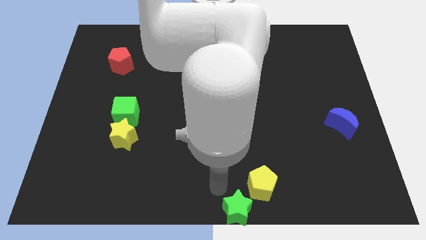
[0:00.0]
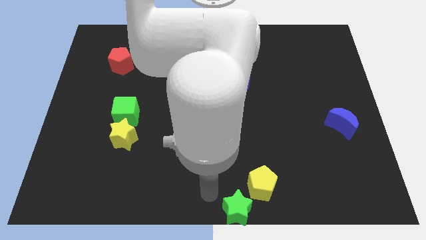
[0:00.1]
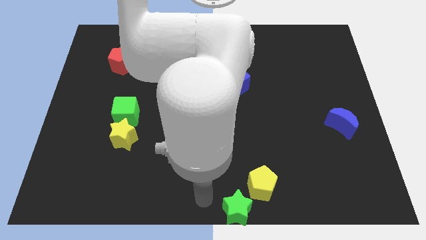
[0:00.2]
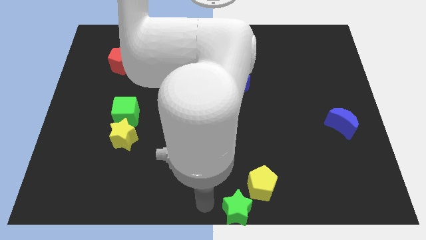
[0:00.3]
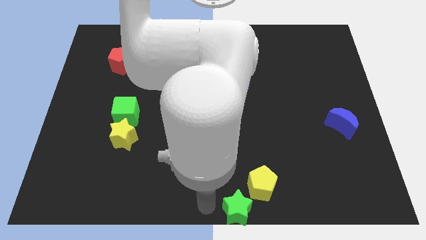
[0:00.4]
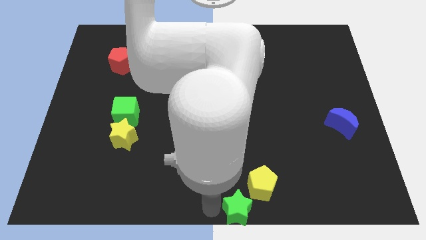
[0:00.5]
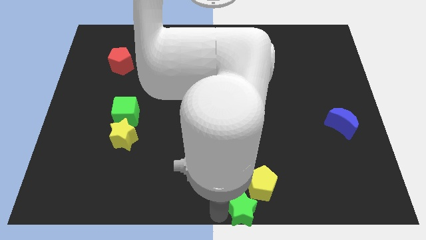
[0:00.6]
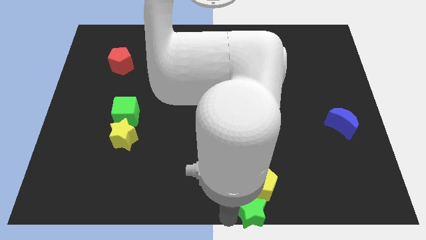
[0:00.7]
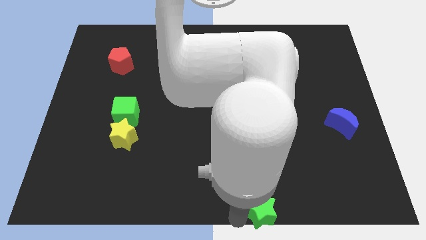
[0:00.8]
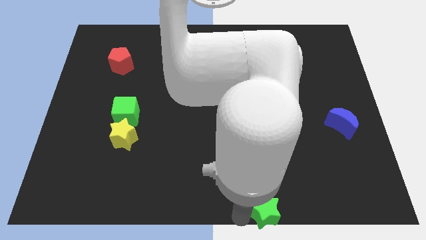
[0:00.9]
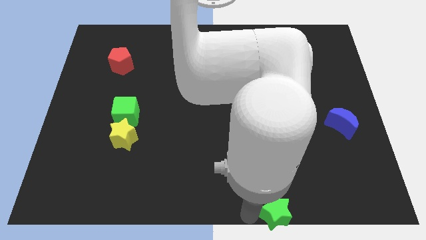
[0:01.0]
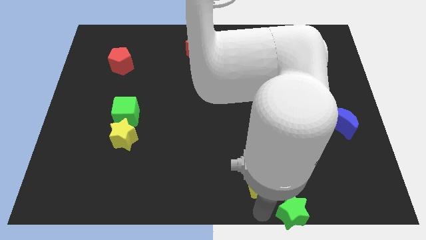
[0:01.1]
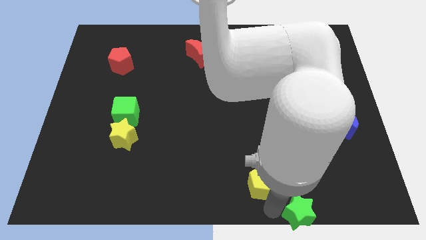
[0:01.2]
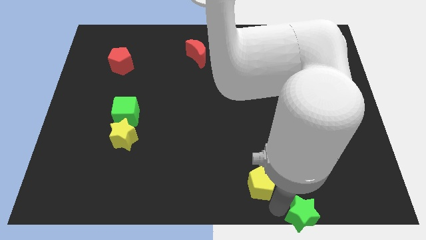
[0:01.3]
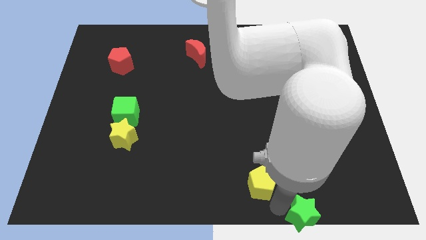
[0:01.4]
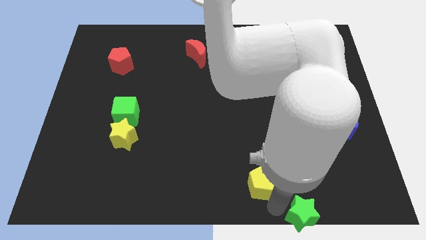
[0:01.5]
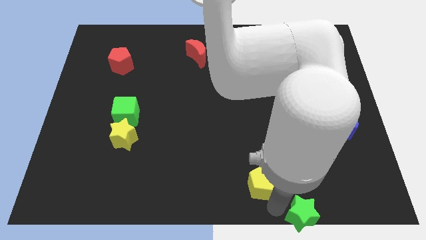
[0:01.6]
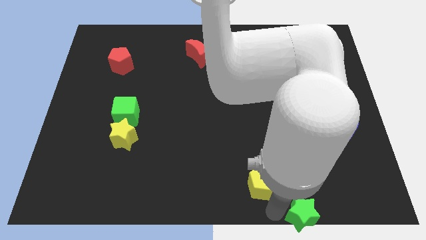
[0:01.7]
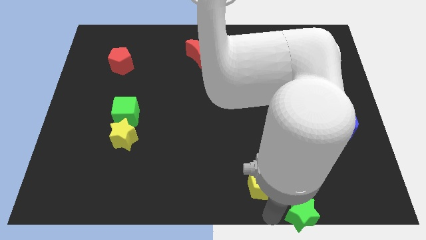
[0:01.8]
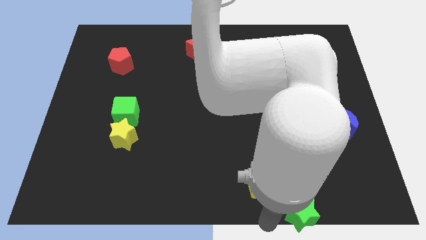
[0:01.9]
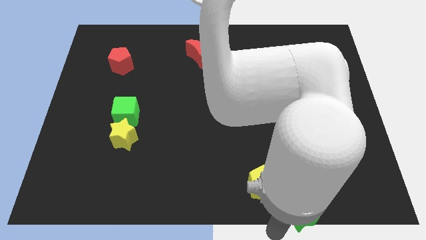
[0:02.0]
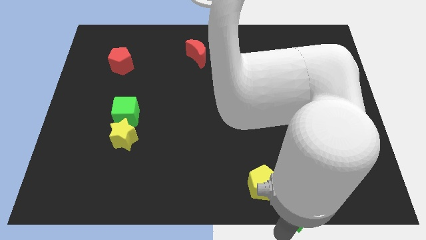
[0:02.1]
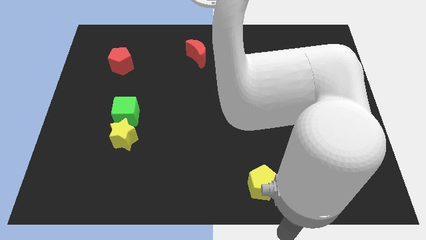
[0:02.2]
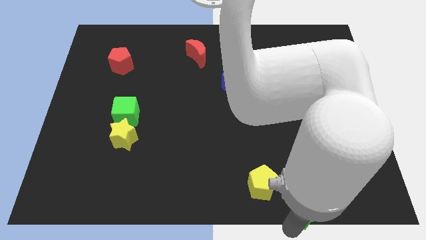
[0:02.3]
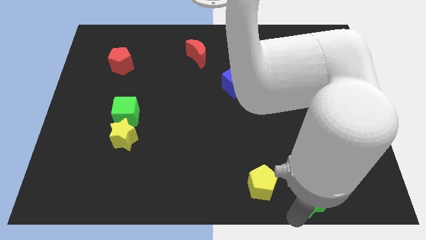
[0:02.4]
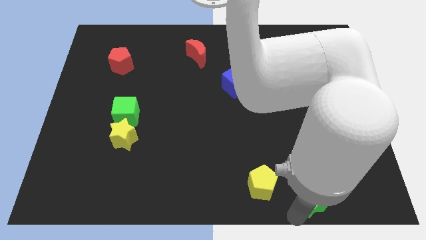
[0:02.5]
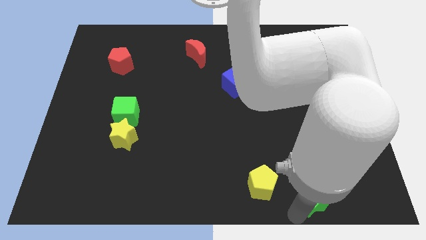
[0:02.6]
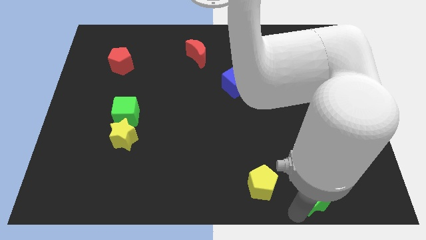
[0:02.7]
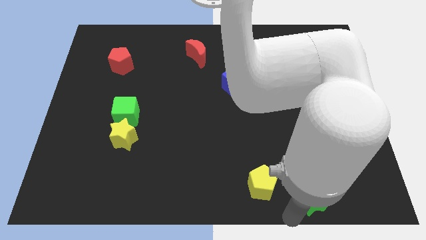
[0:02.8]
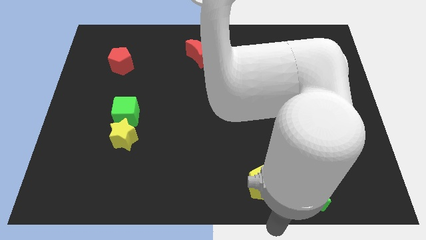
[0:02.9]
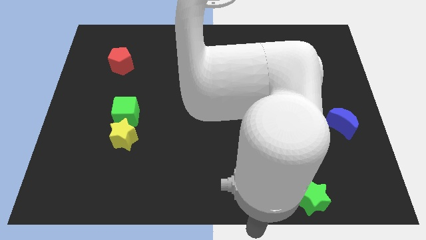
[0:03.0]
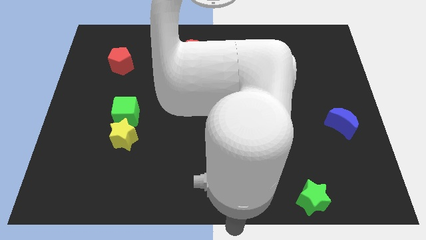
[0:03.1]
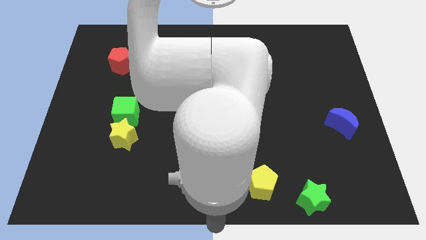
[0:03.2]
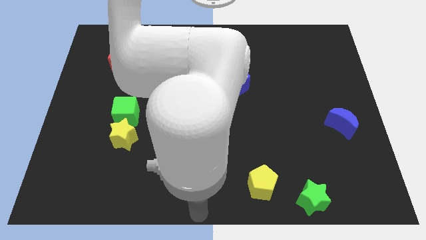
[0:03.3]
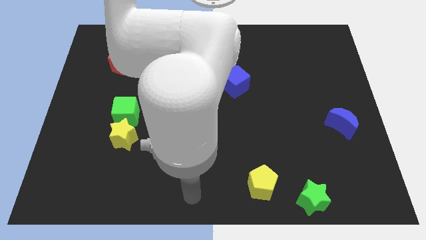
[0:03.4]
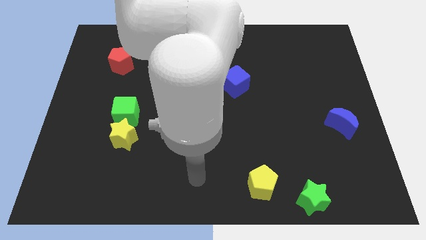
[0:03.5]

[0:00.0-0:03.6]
place green star to the right of yellow pentagon

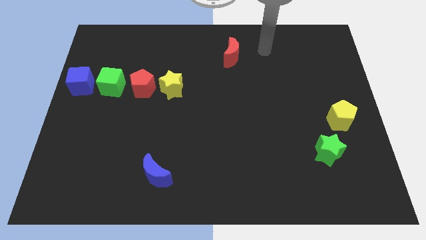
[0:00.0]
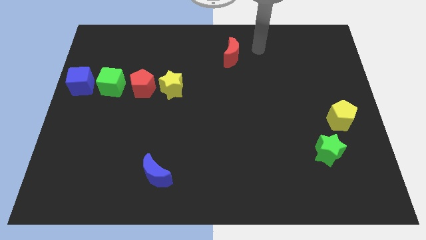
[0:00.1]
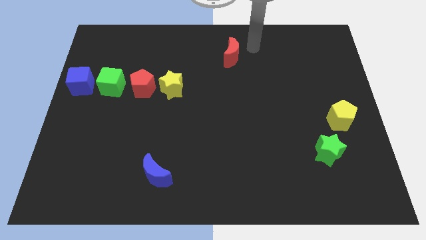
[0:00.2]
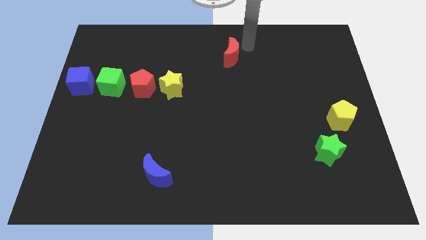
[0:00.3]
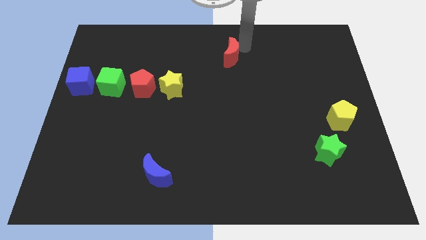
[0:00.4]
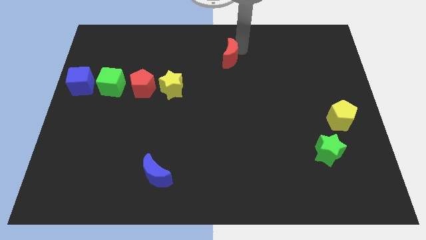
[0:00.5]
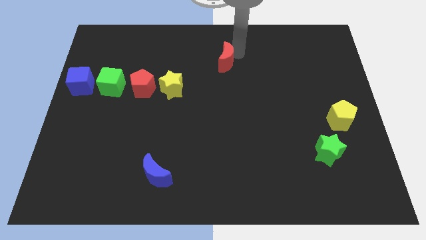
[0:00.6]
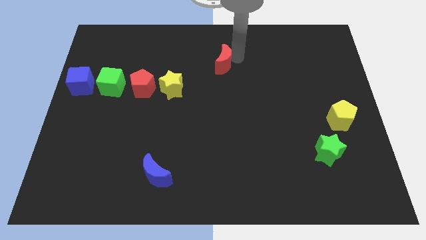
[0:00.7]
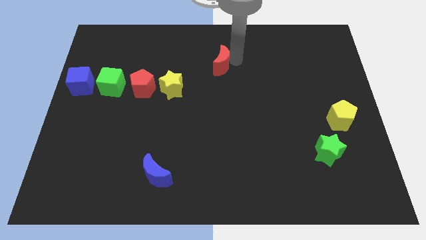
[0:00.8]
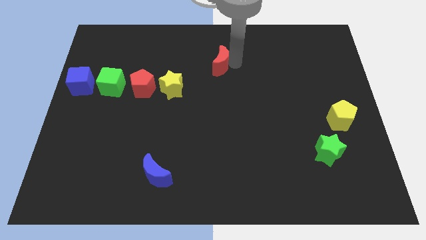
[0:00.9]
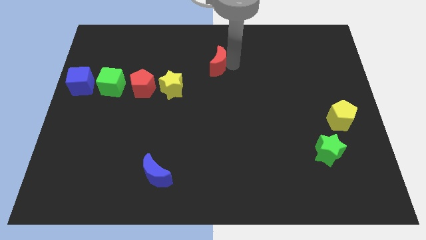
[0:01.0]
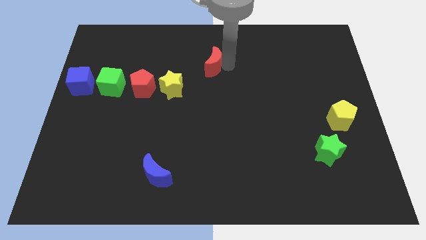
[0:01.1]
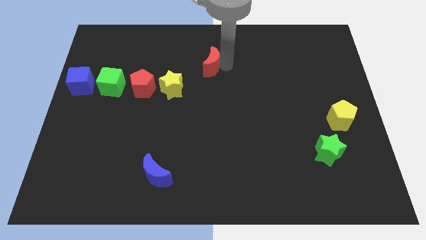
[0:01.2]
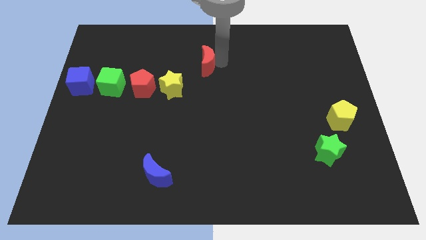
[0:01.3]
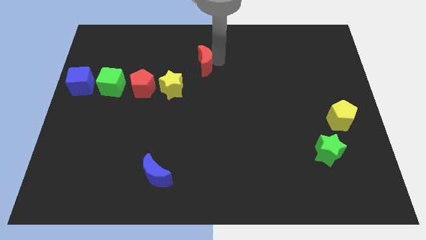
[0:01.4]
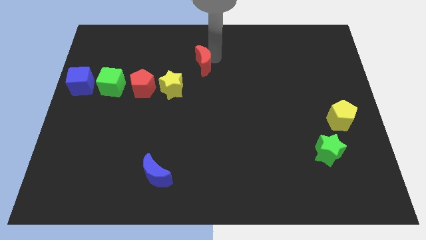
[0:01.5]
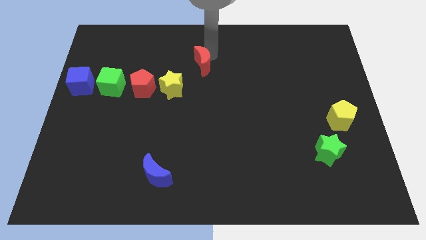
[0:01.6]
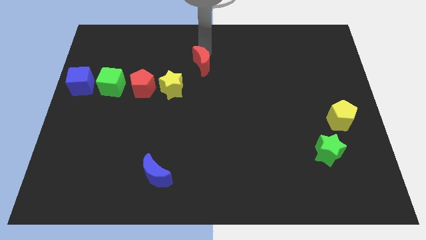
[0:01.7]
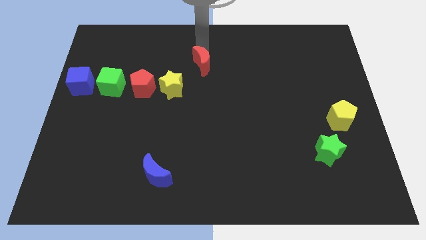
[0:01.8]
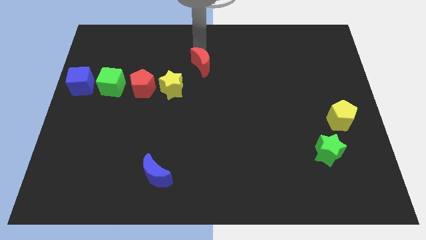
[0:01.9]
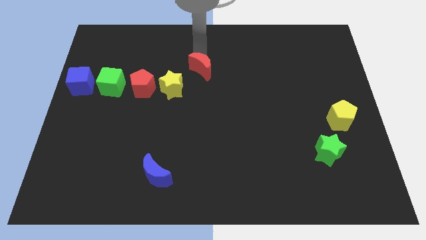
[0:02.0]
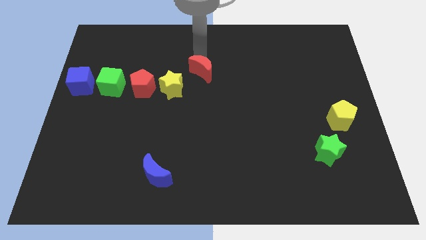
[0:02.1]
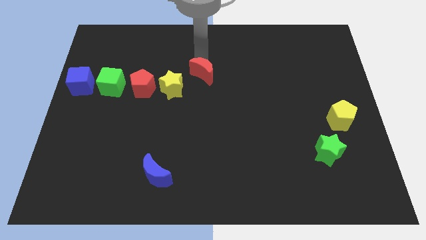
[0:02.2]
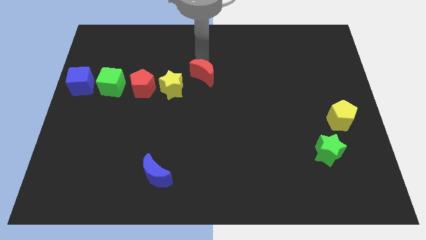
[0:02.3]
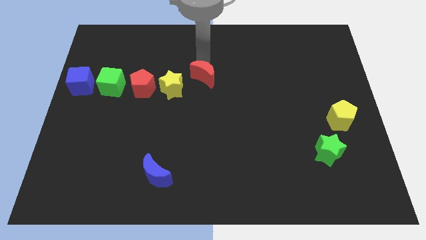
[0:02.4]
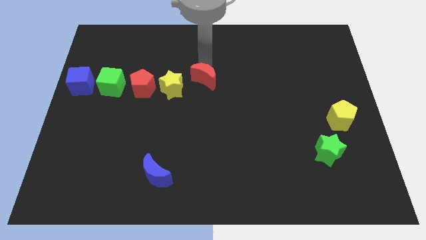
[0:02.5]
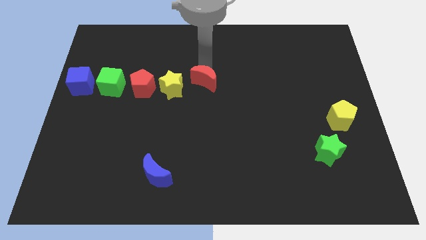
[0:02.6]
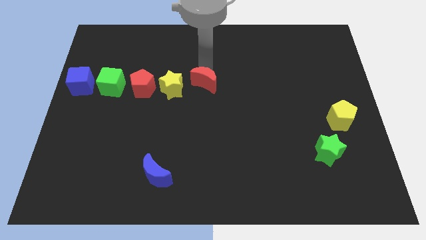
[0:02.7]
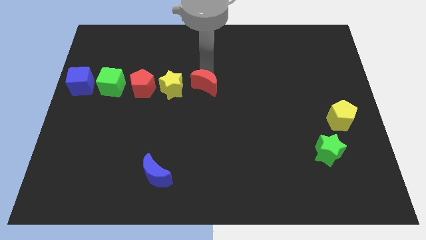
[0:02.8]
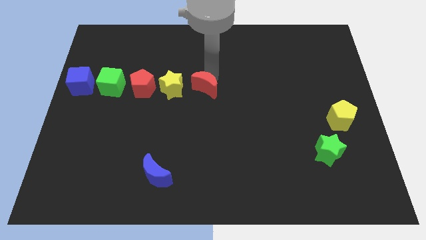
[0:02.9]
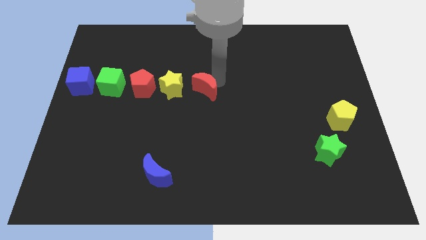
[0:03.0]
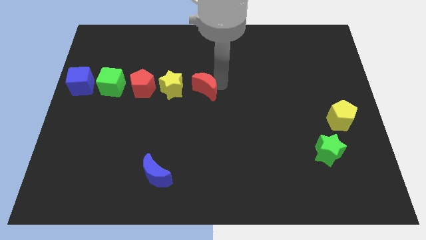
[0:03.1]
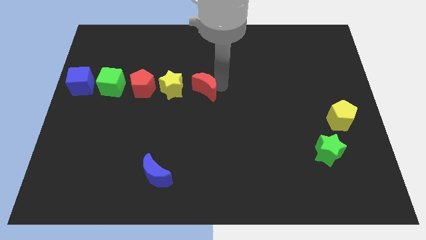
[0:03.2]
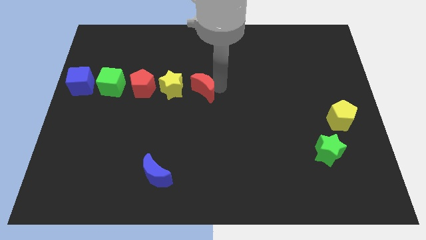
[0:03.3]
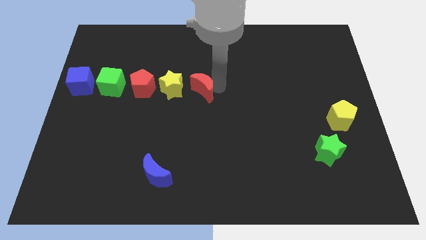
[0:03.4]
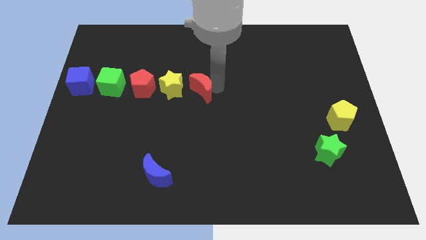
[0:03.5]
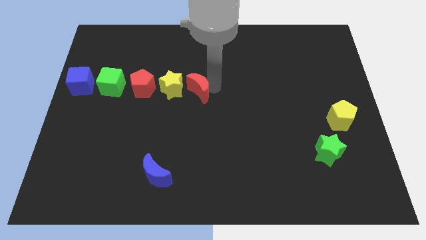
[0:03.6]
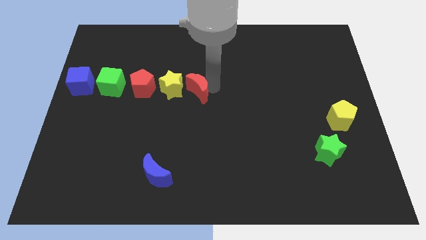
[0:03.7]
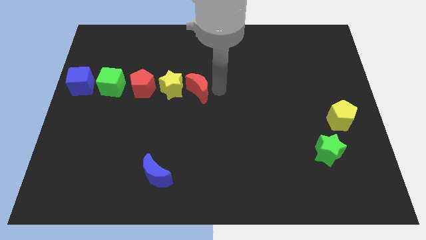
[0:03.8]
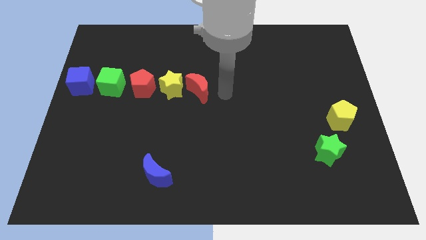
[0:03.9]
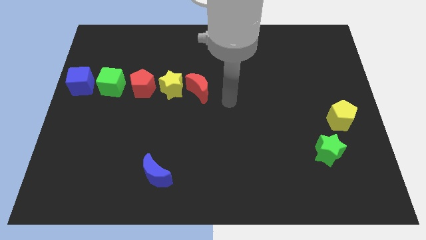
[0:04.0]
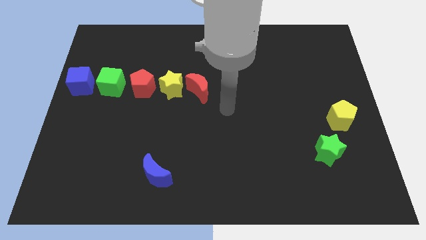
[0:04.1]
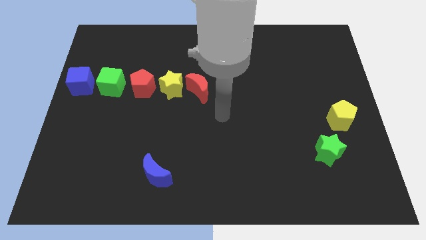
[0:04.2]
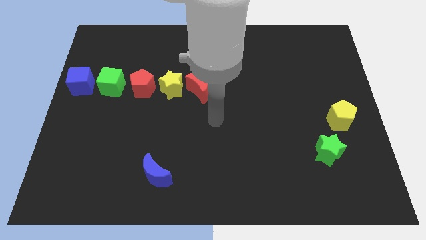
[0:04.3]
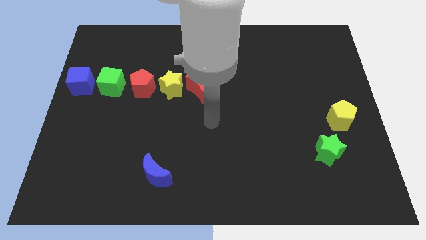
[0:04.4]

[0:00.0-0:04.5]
place the red crescent right to the yellow star

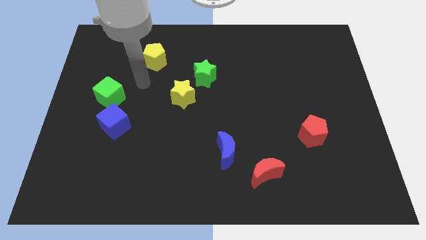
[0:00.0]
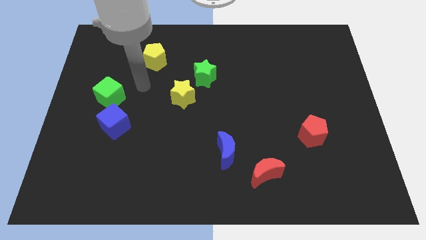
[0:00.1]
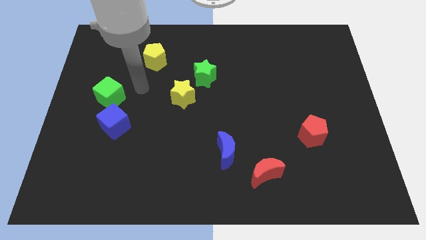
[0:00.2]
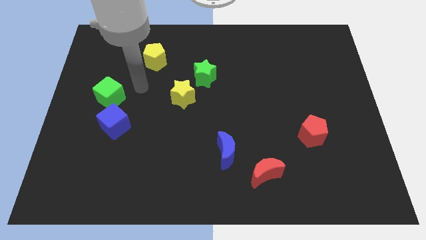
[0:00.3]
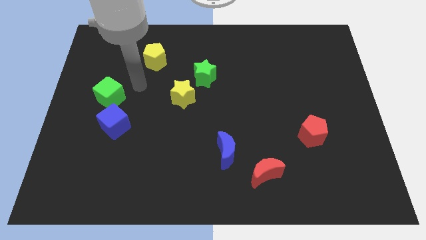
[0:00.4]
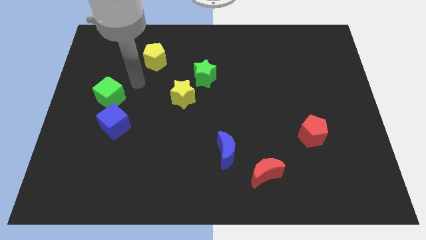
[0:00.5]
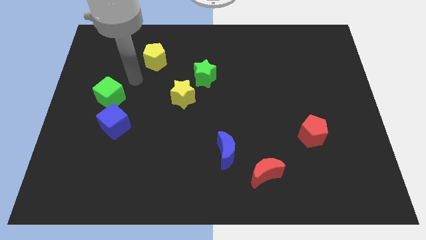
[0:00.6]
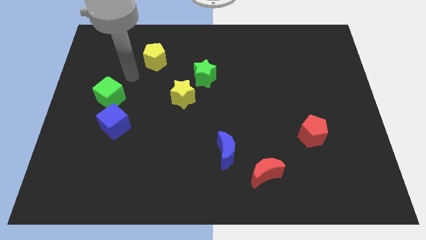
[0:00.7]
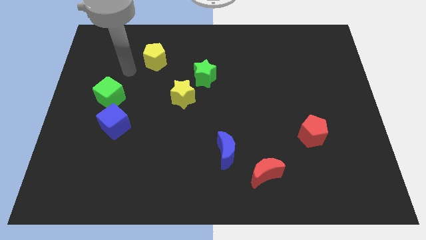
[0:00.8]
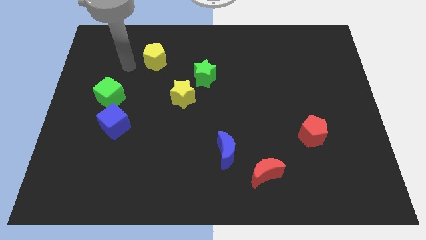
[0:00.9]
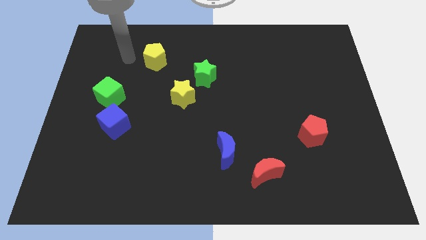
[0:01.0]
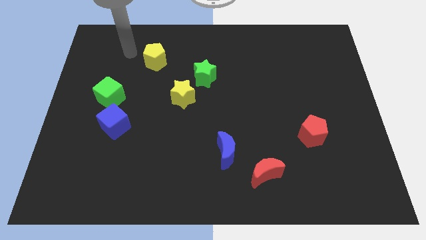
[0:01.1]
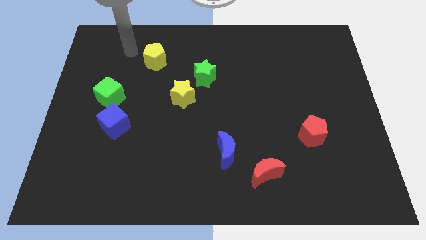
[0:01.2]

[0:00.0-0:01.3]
move your arm towards the yellow pentagon
